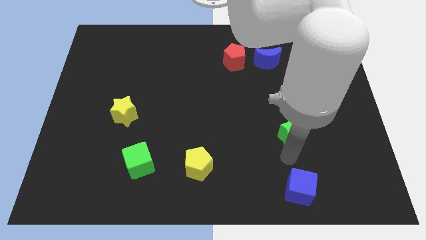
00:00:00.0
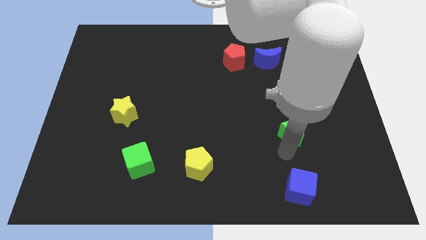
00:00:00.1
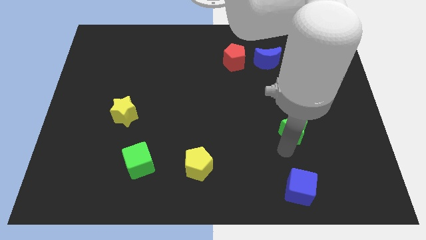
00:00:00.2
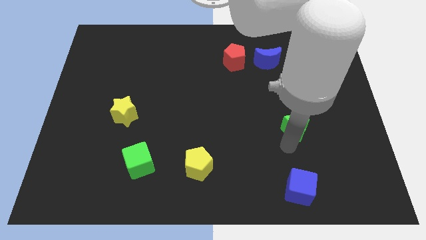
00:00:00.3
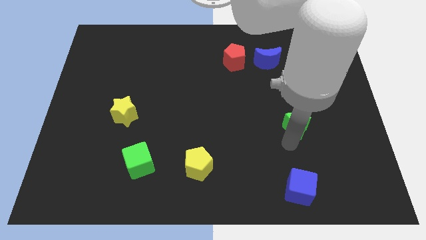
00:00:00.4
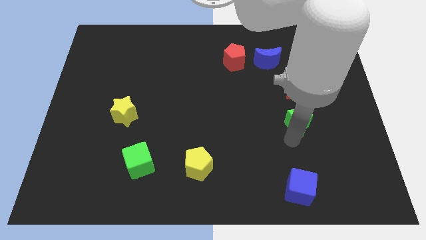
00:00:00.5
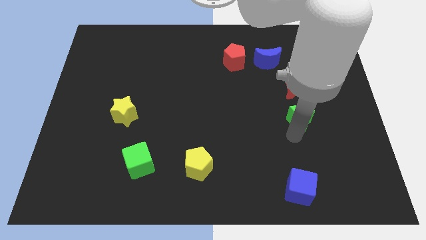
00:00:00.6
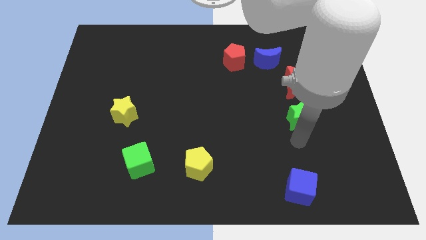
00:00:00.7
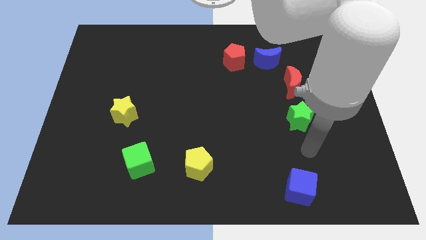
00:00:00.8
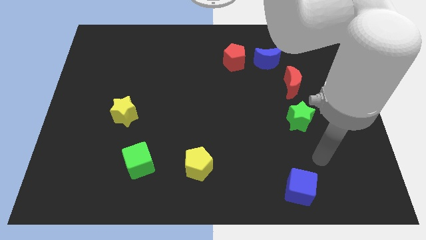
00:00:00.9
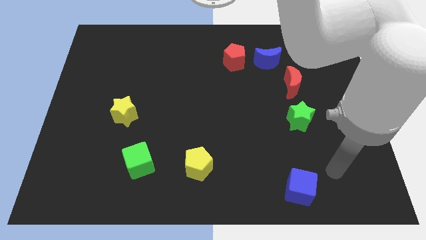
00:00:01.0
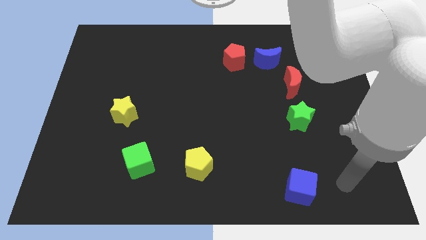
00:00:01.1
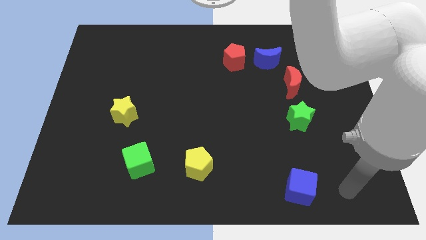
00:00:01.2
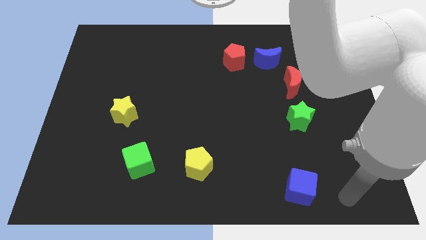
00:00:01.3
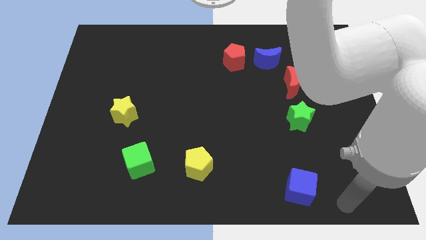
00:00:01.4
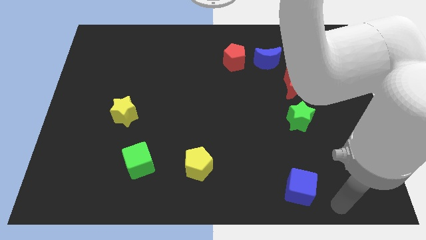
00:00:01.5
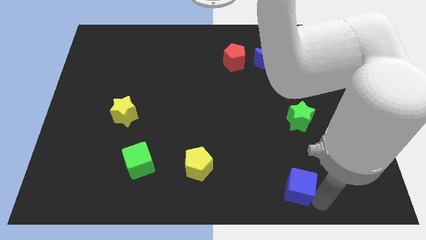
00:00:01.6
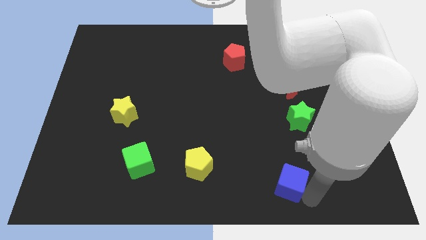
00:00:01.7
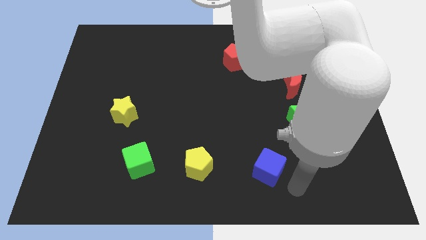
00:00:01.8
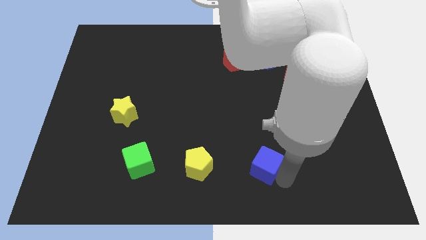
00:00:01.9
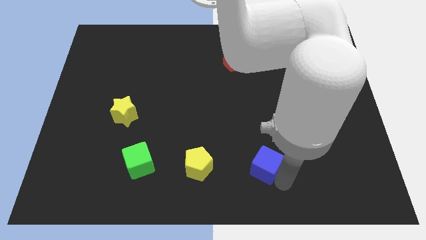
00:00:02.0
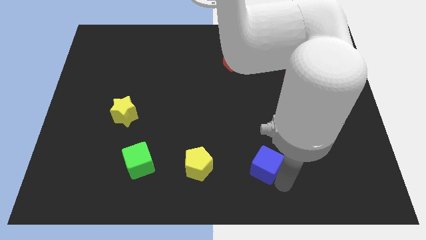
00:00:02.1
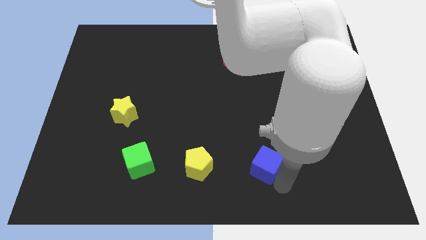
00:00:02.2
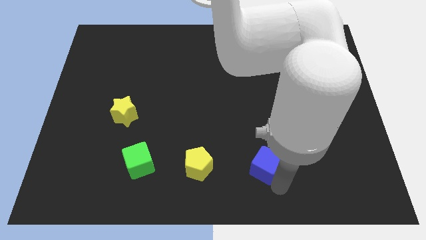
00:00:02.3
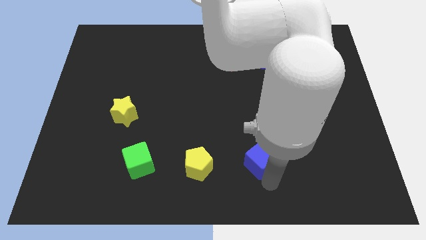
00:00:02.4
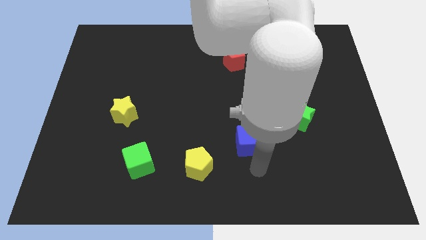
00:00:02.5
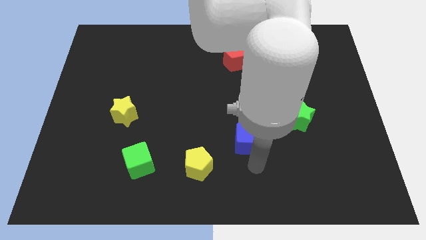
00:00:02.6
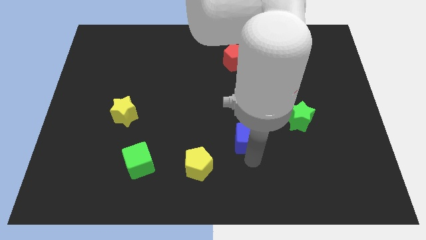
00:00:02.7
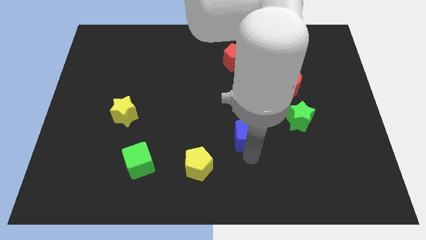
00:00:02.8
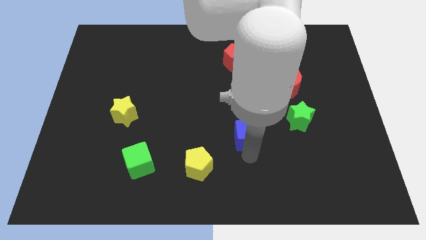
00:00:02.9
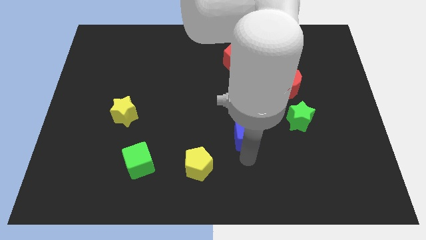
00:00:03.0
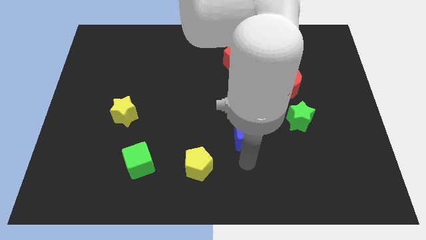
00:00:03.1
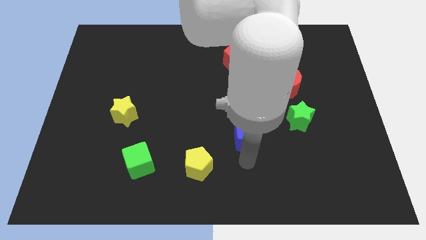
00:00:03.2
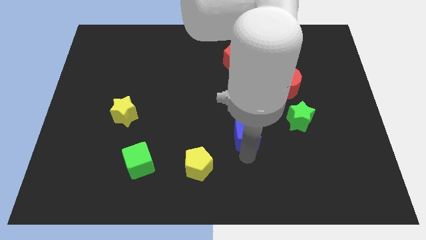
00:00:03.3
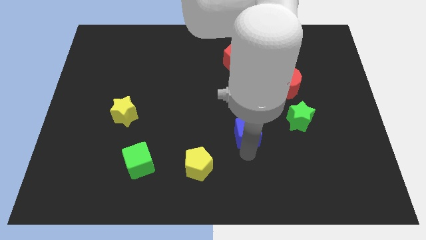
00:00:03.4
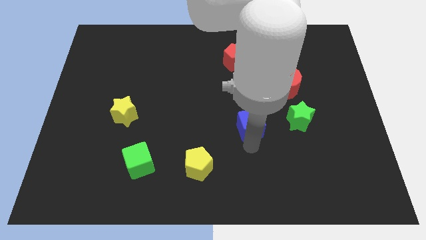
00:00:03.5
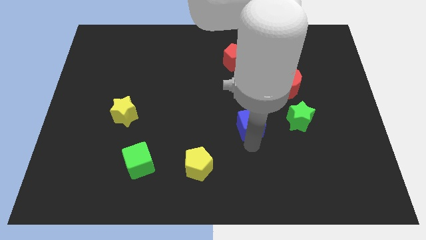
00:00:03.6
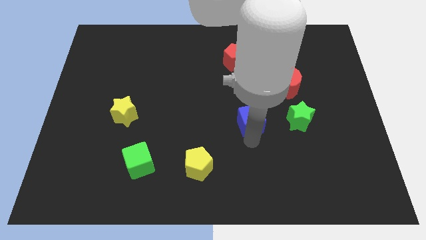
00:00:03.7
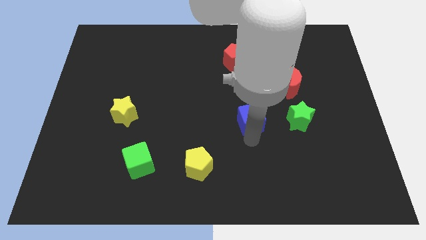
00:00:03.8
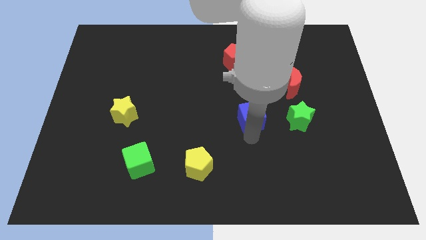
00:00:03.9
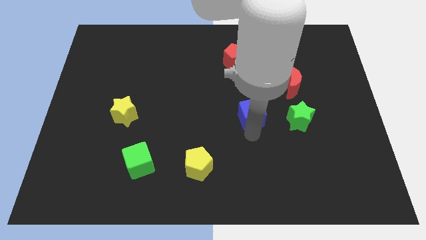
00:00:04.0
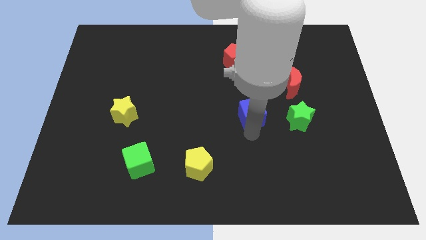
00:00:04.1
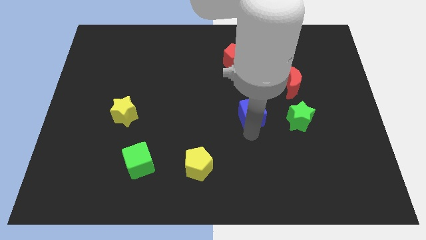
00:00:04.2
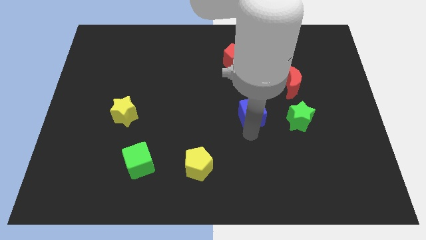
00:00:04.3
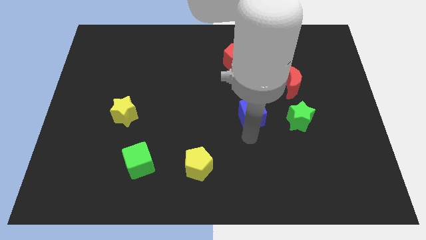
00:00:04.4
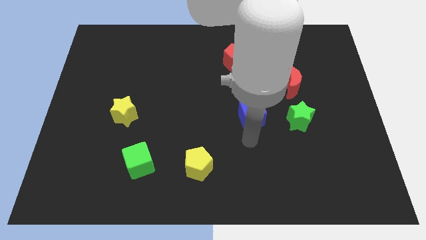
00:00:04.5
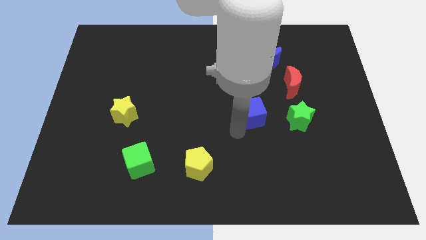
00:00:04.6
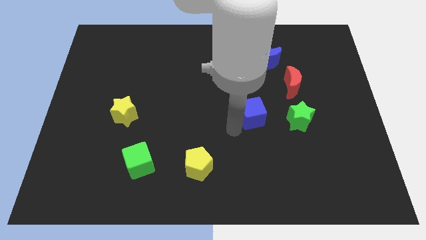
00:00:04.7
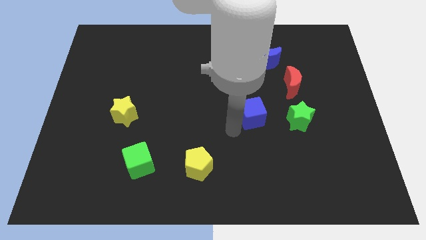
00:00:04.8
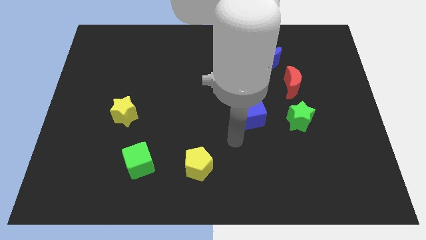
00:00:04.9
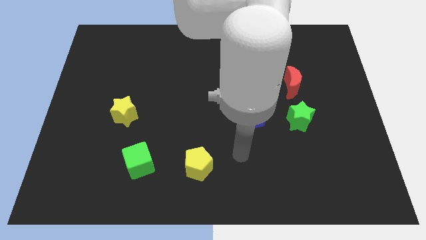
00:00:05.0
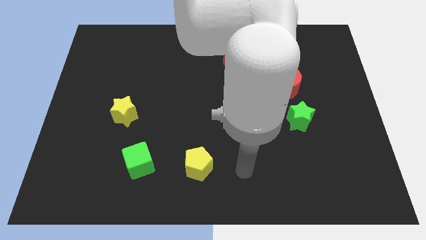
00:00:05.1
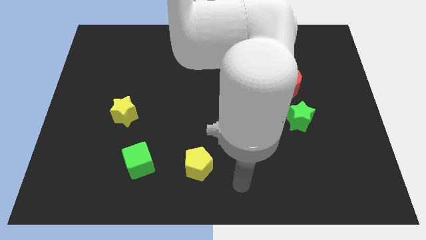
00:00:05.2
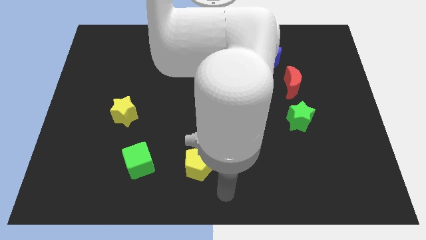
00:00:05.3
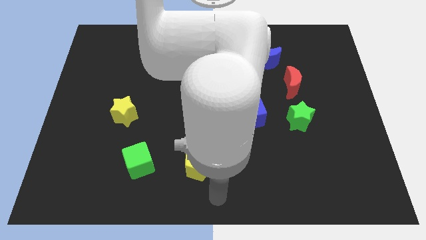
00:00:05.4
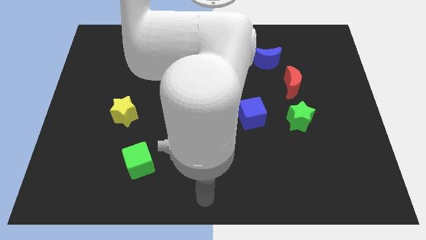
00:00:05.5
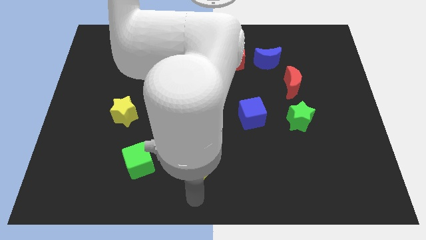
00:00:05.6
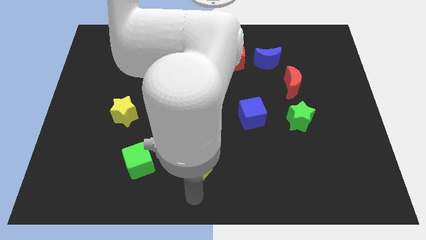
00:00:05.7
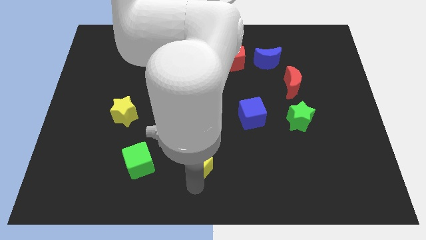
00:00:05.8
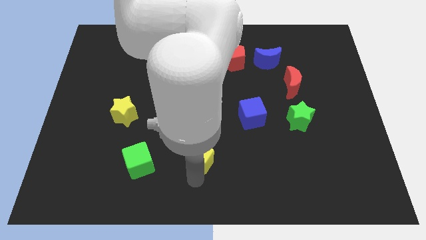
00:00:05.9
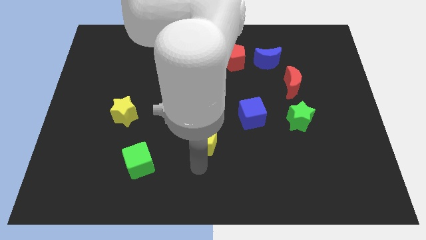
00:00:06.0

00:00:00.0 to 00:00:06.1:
place the blue cube to the left of the green star

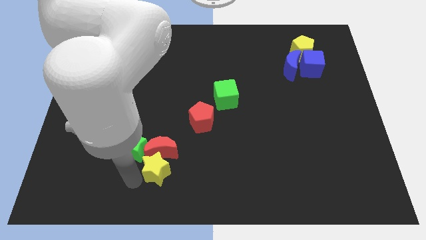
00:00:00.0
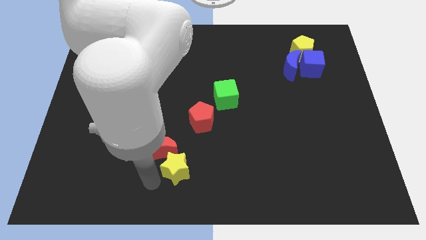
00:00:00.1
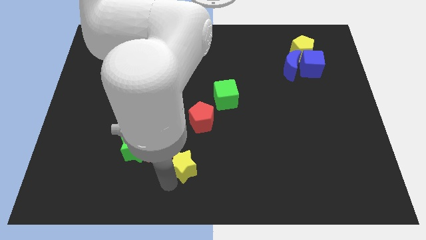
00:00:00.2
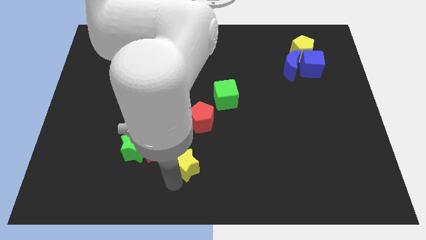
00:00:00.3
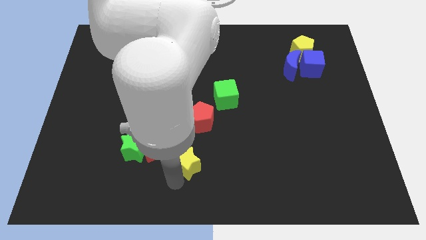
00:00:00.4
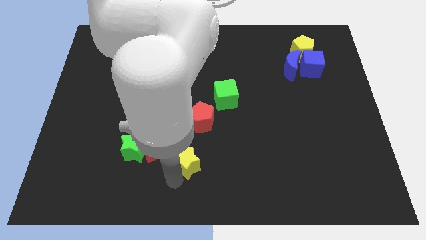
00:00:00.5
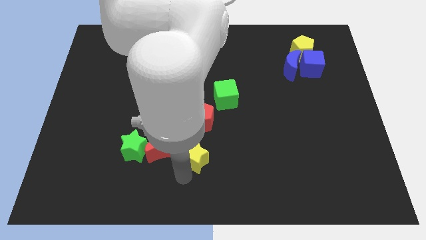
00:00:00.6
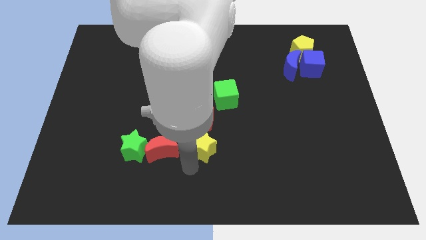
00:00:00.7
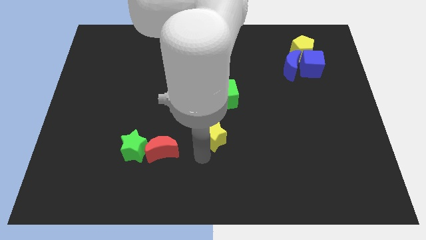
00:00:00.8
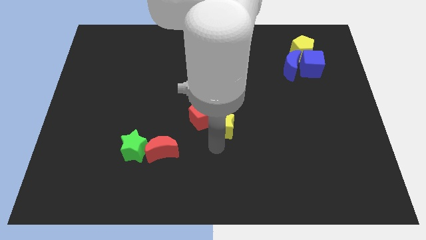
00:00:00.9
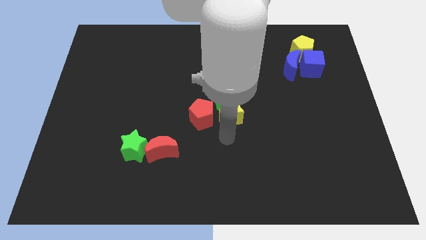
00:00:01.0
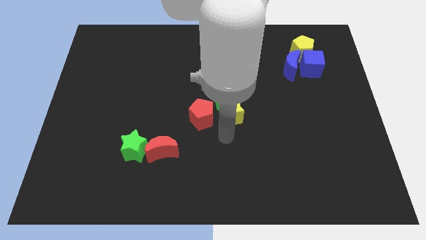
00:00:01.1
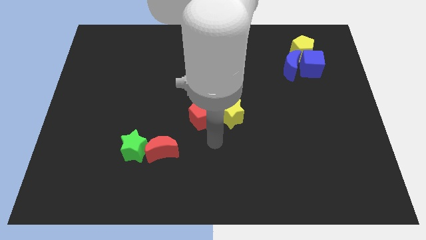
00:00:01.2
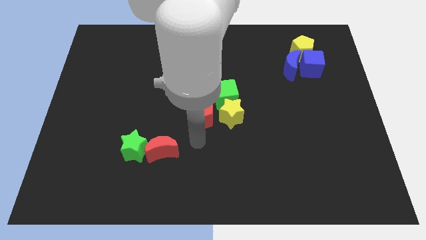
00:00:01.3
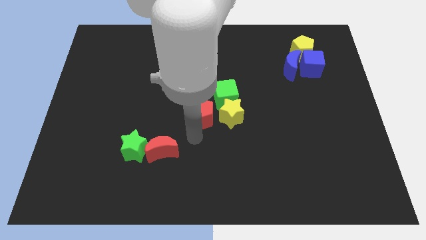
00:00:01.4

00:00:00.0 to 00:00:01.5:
place the yellow star below green cube

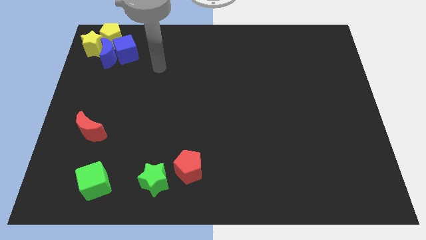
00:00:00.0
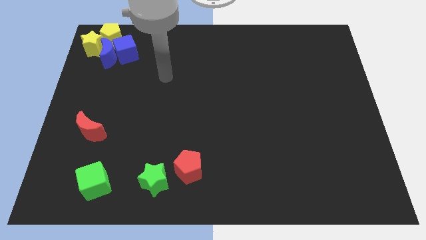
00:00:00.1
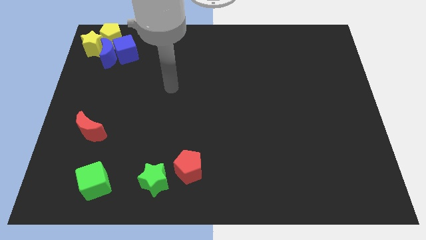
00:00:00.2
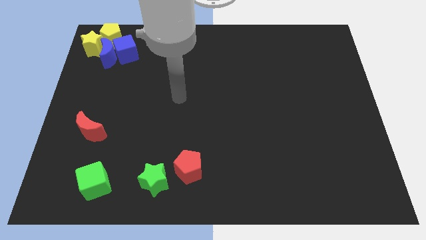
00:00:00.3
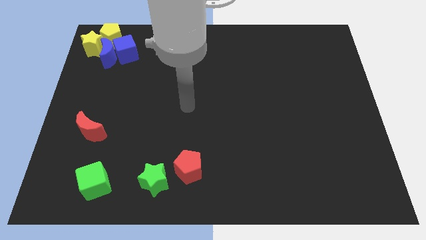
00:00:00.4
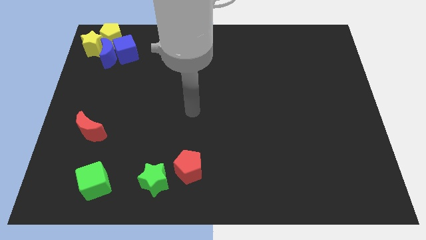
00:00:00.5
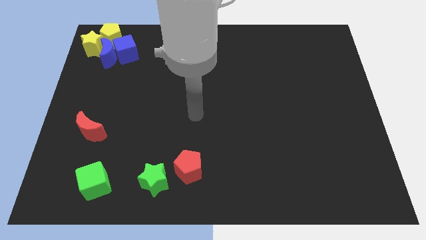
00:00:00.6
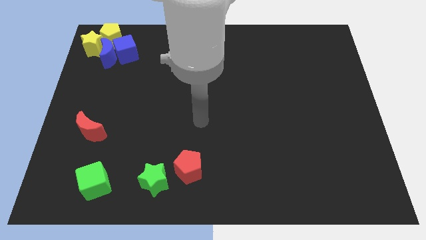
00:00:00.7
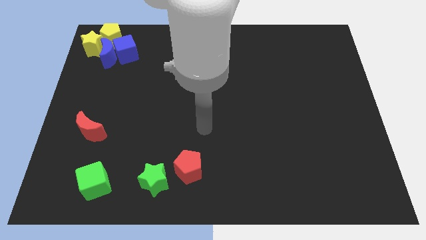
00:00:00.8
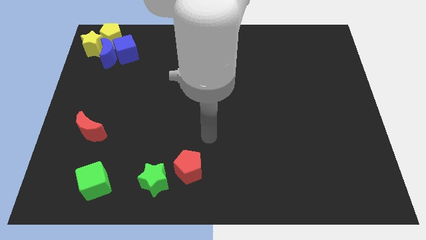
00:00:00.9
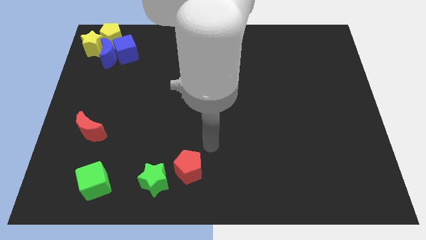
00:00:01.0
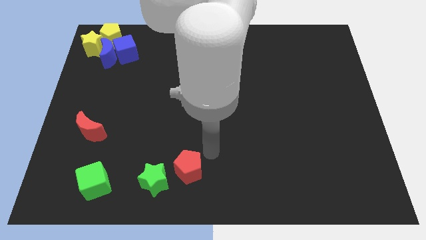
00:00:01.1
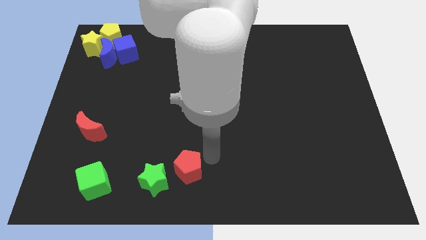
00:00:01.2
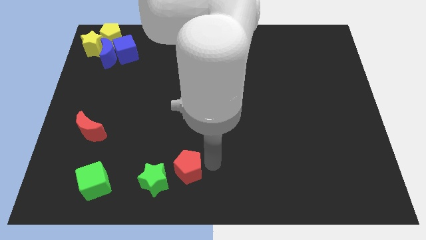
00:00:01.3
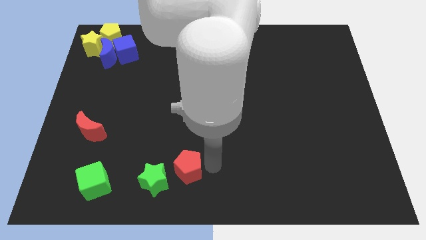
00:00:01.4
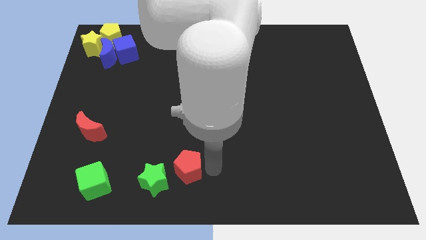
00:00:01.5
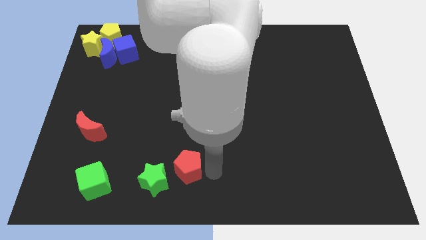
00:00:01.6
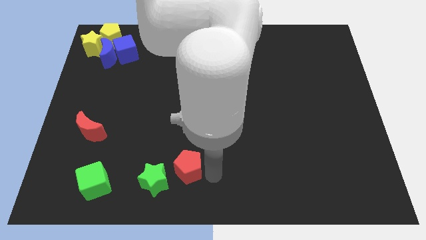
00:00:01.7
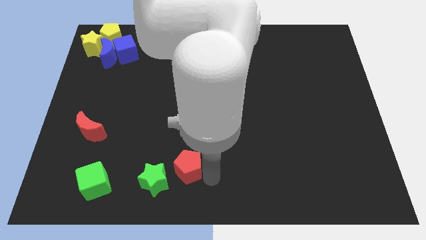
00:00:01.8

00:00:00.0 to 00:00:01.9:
move your arm away from the blue cube
